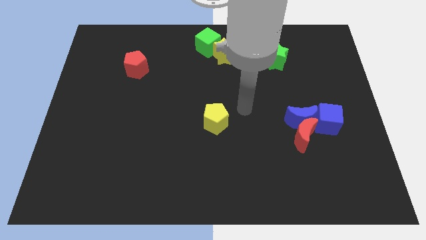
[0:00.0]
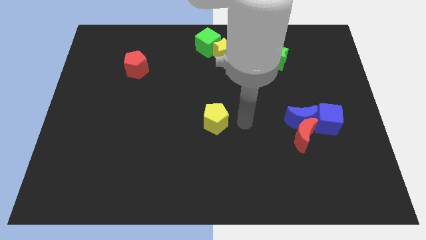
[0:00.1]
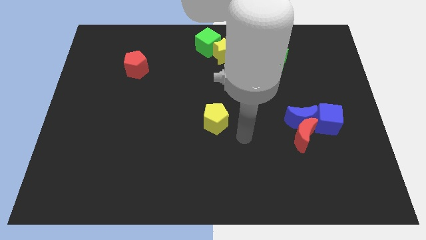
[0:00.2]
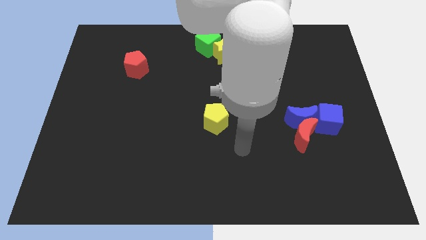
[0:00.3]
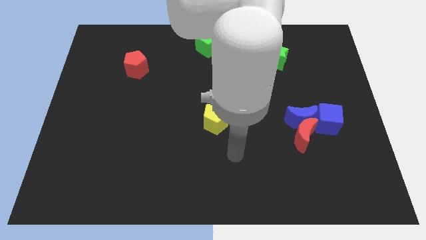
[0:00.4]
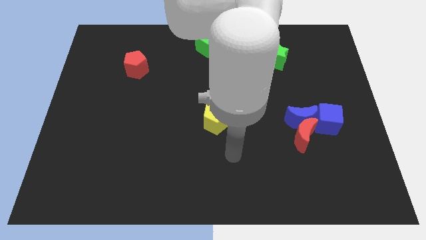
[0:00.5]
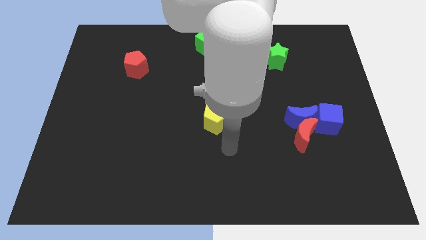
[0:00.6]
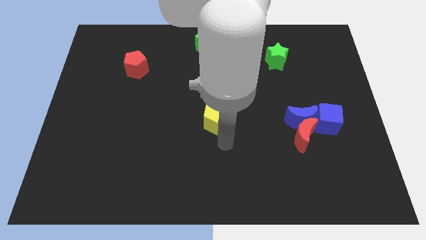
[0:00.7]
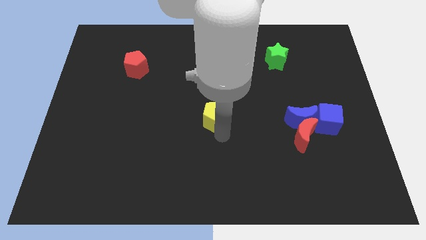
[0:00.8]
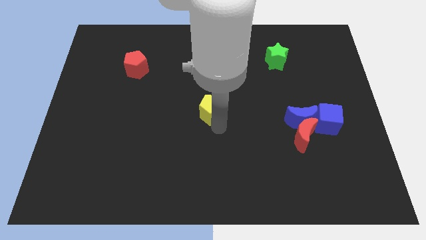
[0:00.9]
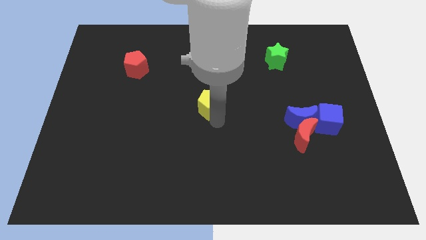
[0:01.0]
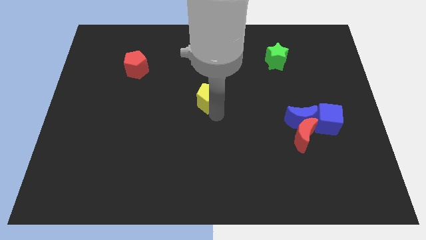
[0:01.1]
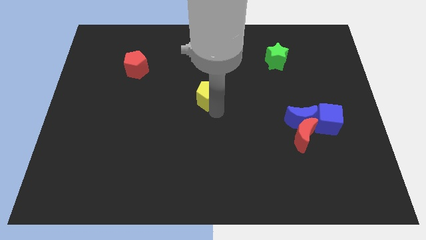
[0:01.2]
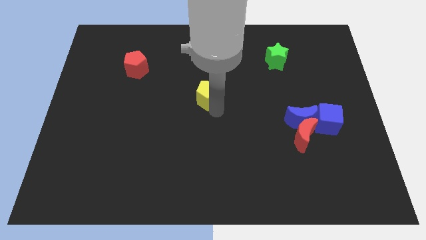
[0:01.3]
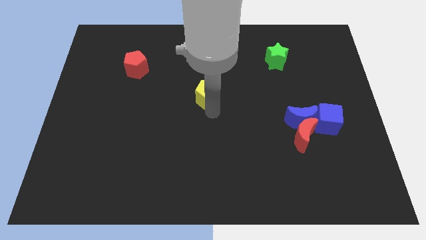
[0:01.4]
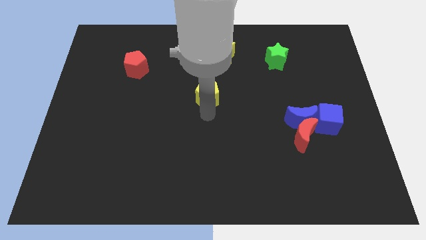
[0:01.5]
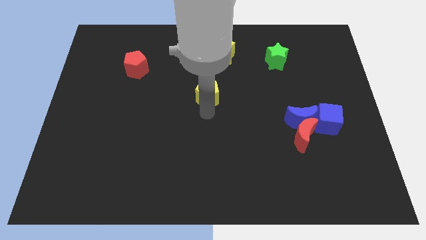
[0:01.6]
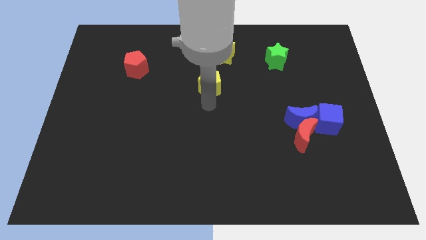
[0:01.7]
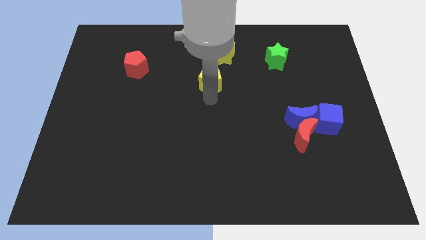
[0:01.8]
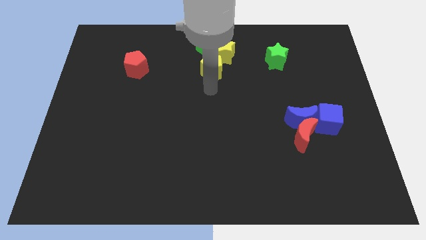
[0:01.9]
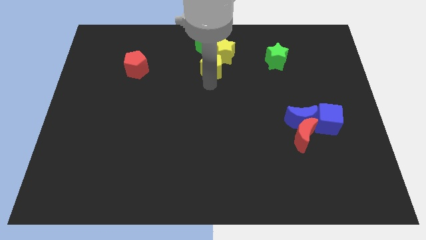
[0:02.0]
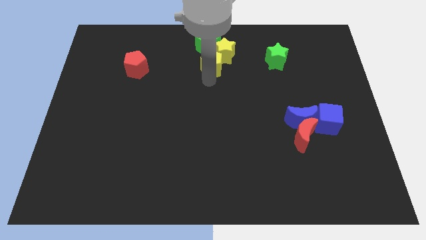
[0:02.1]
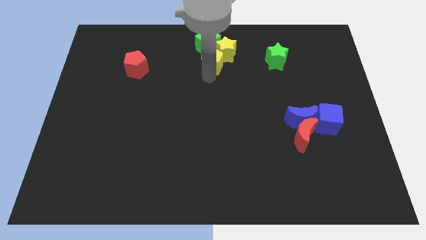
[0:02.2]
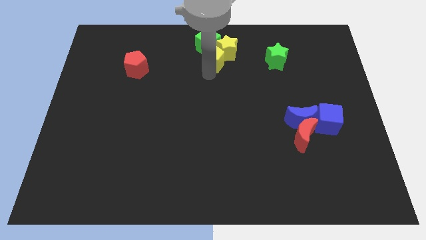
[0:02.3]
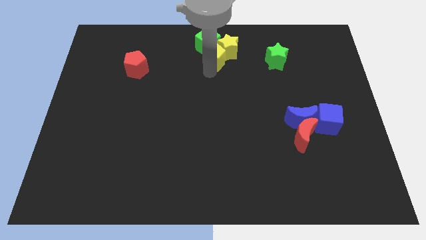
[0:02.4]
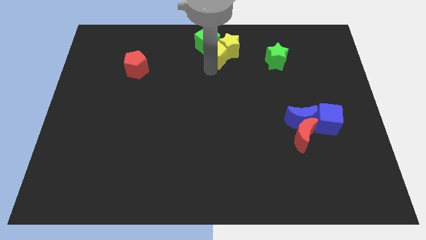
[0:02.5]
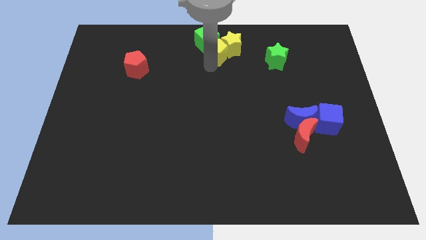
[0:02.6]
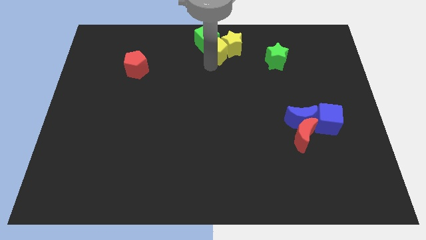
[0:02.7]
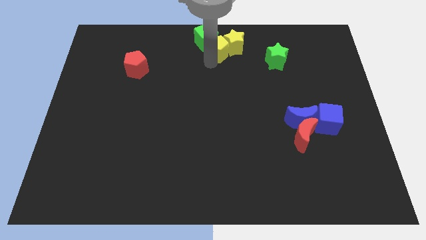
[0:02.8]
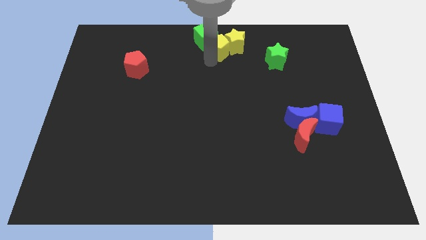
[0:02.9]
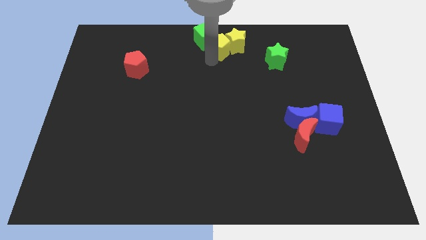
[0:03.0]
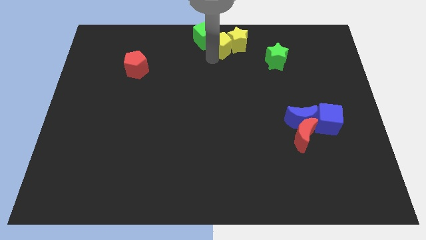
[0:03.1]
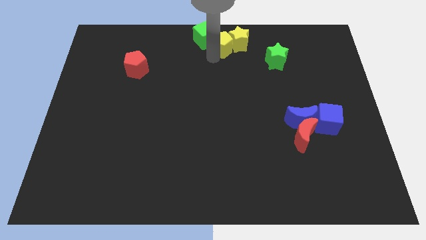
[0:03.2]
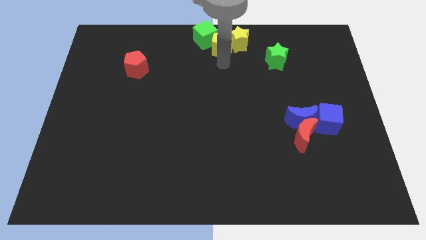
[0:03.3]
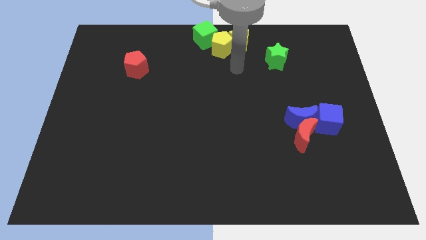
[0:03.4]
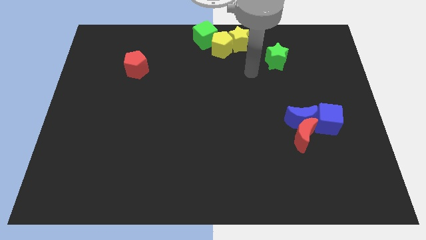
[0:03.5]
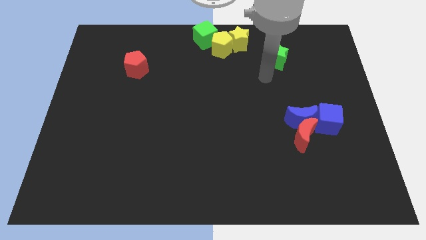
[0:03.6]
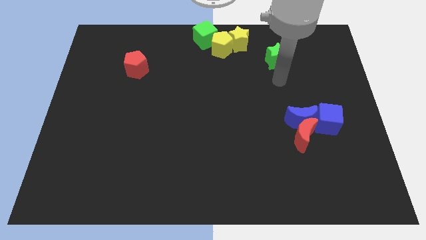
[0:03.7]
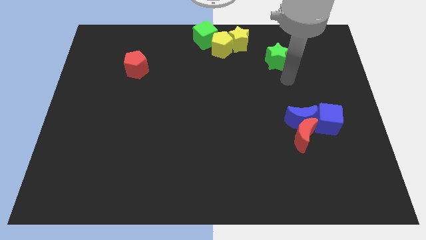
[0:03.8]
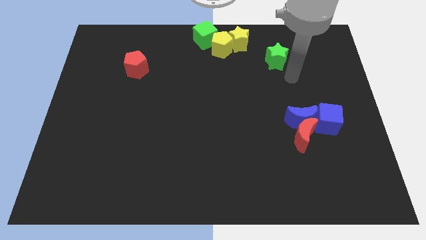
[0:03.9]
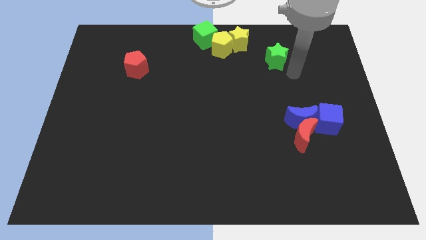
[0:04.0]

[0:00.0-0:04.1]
push the yellow pentagon into the yellow star

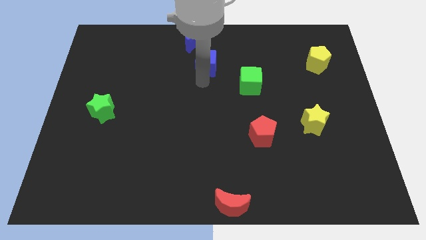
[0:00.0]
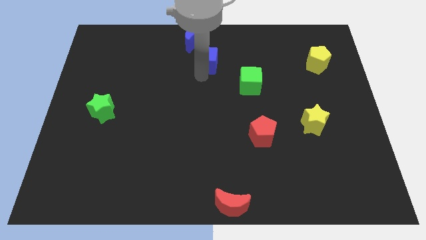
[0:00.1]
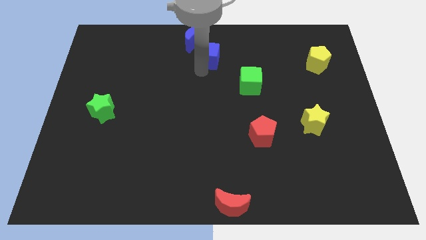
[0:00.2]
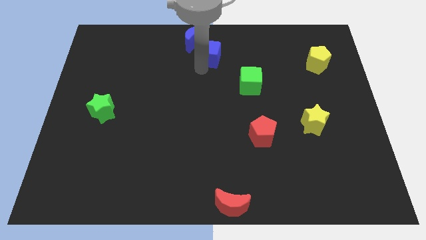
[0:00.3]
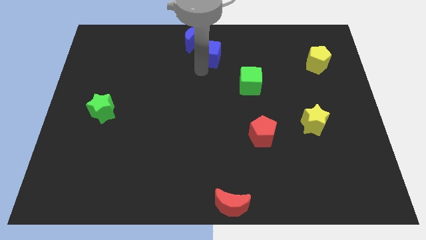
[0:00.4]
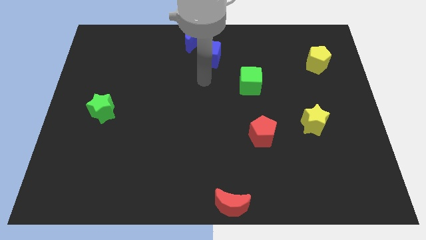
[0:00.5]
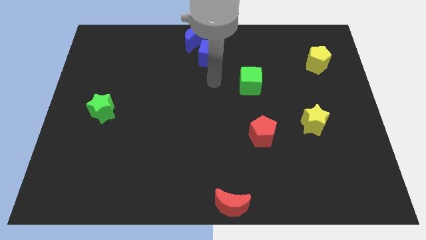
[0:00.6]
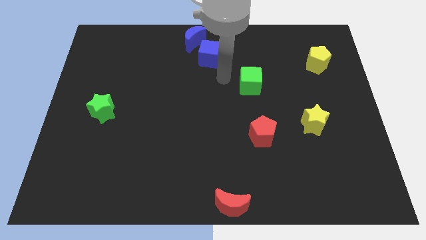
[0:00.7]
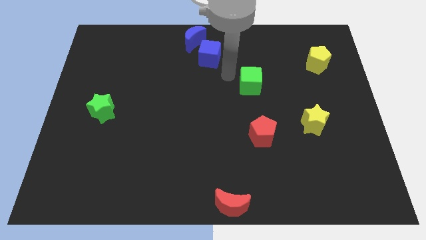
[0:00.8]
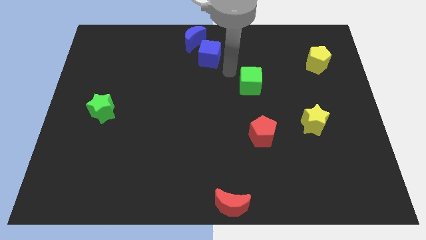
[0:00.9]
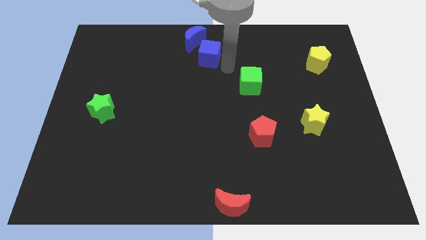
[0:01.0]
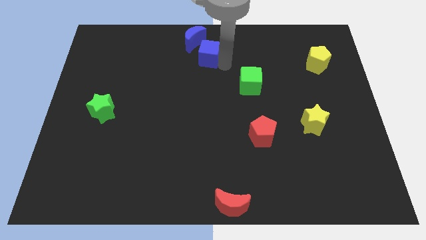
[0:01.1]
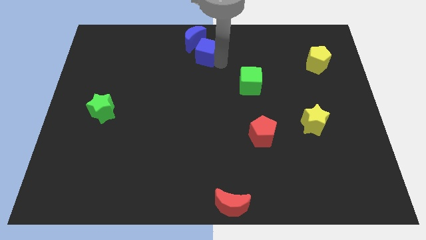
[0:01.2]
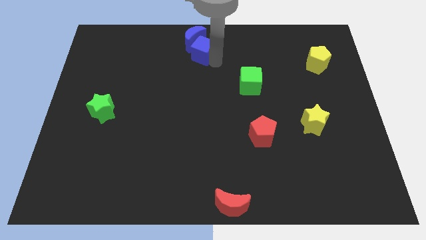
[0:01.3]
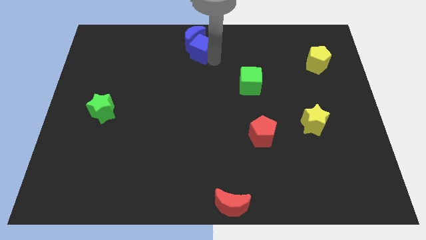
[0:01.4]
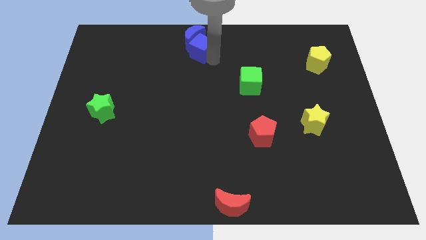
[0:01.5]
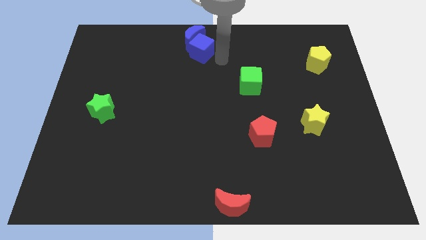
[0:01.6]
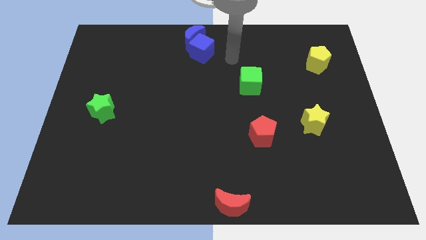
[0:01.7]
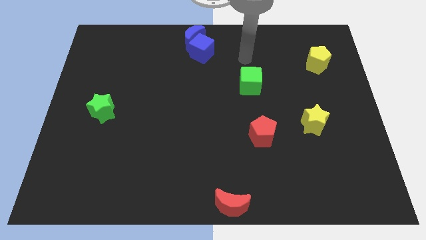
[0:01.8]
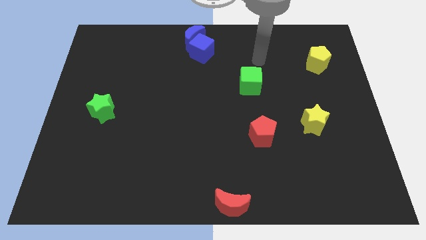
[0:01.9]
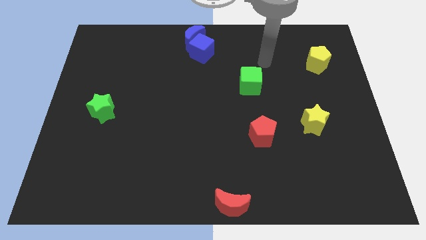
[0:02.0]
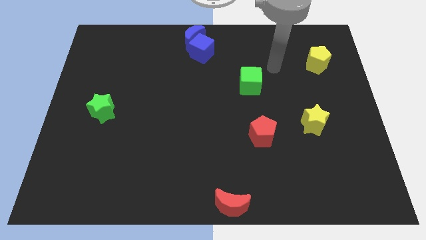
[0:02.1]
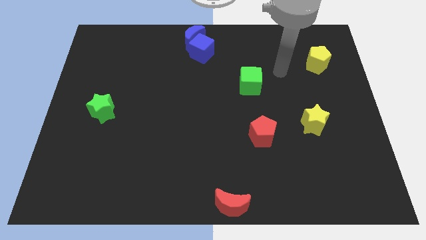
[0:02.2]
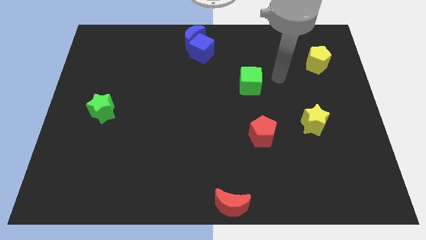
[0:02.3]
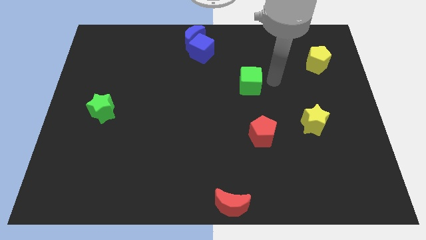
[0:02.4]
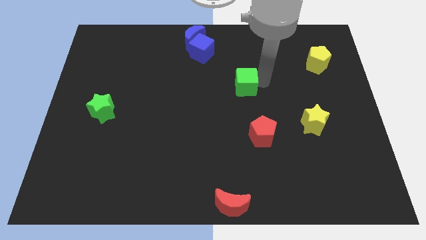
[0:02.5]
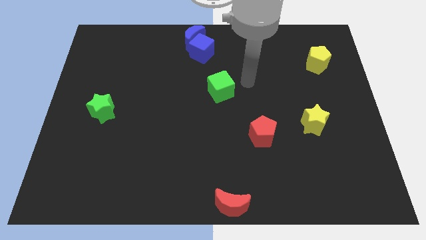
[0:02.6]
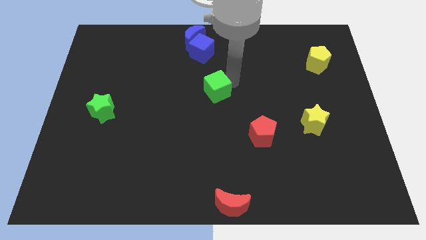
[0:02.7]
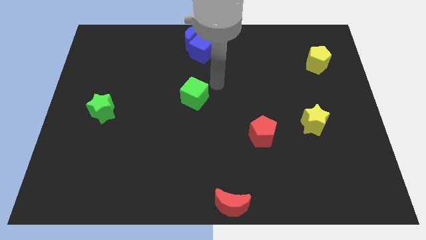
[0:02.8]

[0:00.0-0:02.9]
push green cube below blue cube

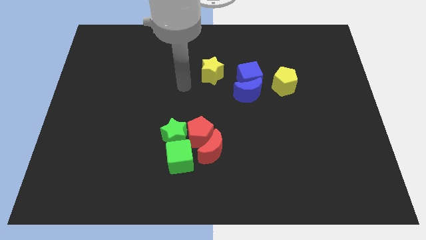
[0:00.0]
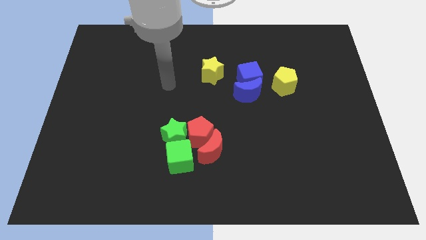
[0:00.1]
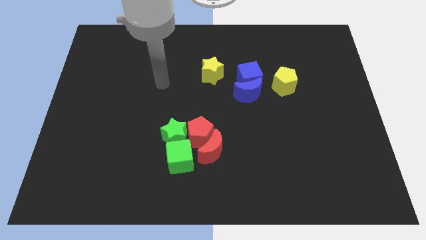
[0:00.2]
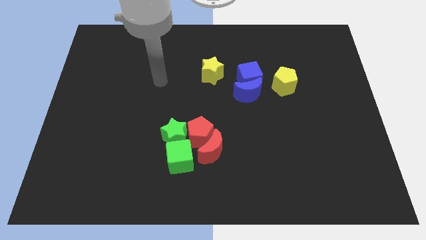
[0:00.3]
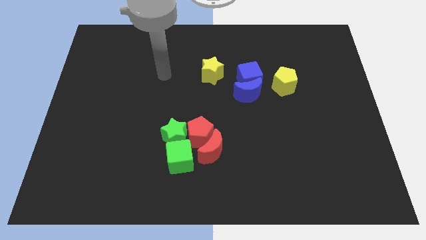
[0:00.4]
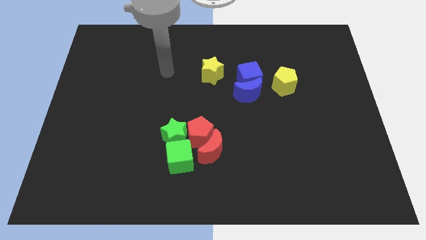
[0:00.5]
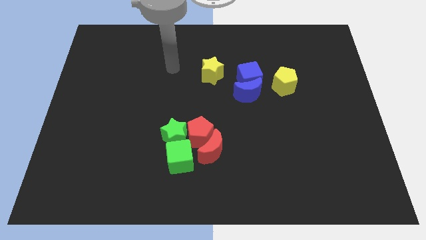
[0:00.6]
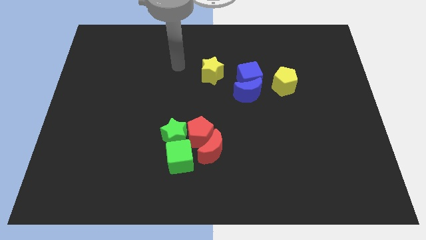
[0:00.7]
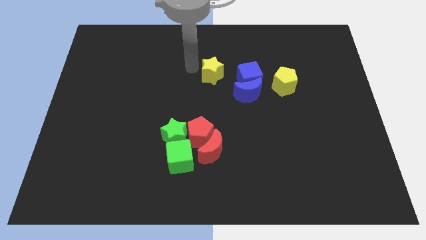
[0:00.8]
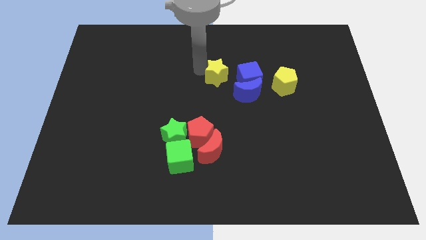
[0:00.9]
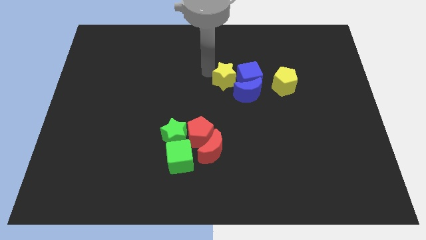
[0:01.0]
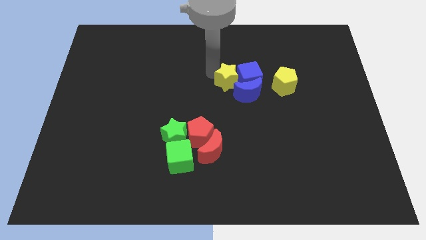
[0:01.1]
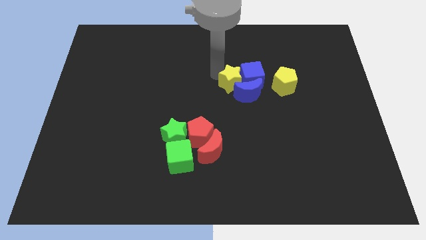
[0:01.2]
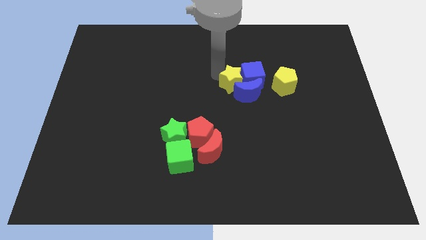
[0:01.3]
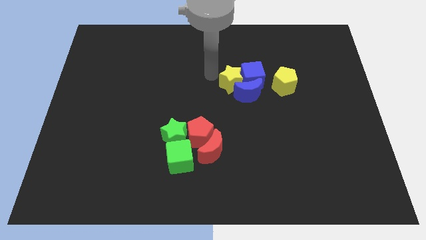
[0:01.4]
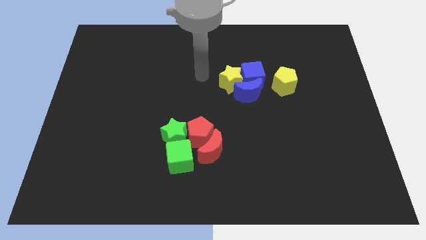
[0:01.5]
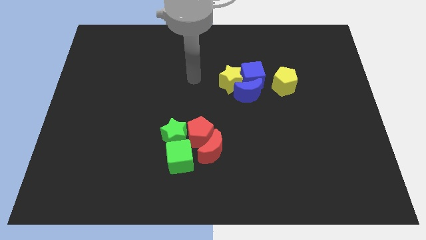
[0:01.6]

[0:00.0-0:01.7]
move the yellow star into the blue cube

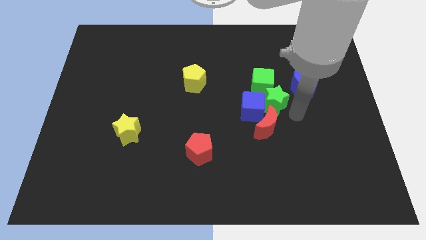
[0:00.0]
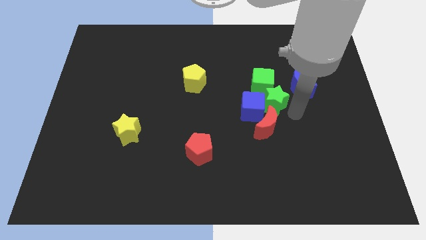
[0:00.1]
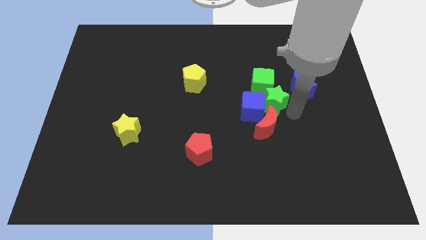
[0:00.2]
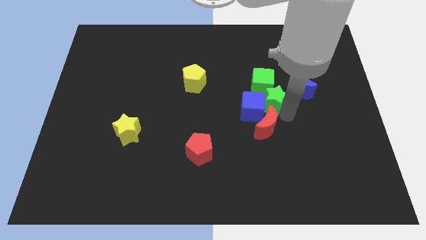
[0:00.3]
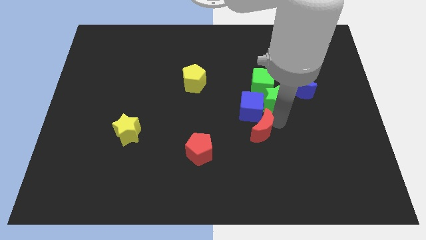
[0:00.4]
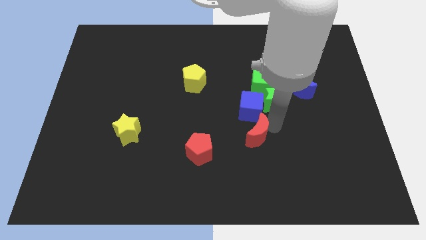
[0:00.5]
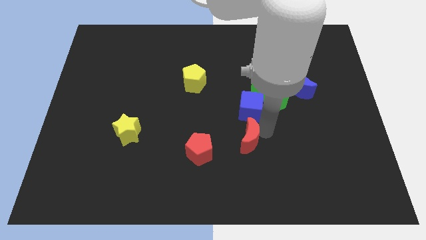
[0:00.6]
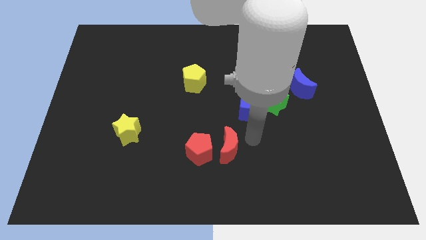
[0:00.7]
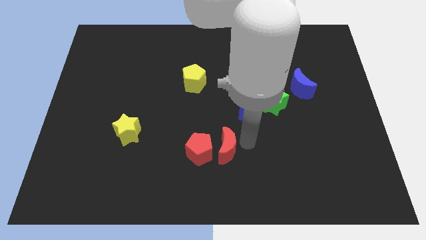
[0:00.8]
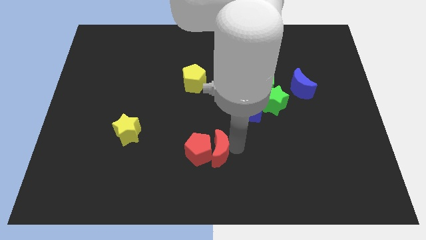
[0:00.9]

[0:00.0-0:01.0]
place the red moon to the right of the reed pentagon
